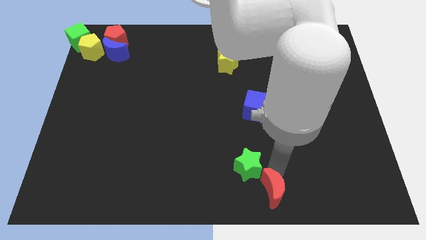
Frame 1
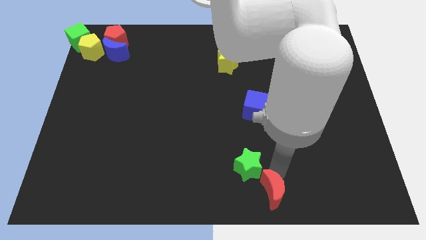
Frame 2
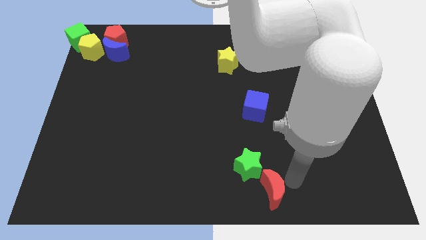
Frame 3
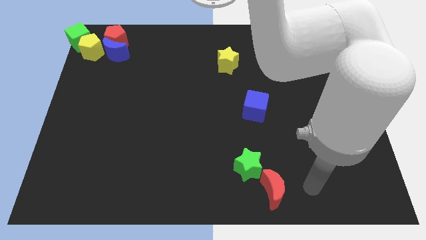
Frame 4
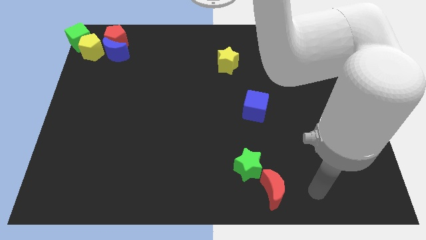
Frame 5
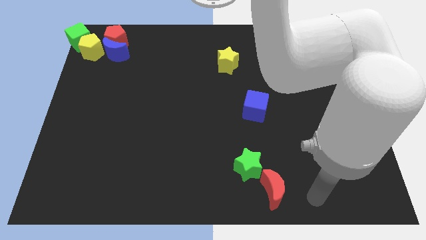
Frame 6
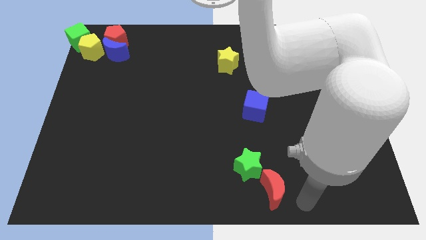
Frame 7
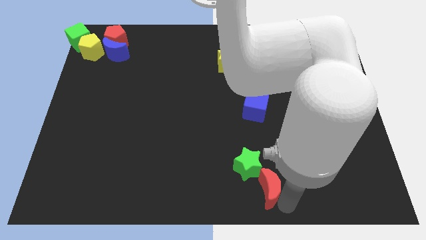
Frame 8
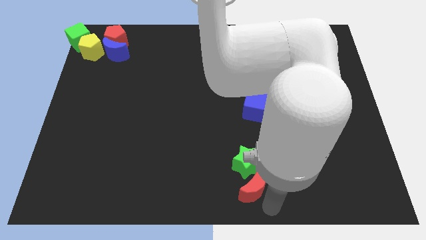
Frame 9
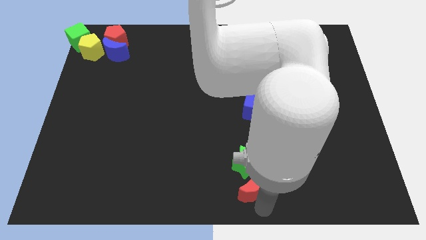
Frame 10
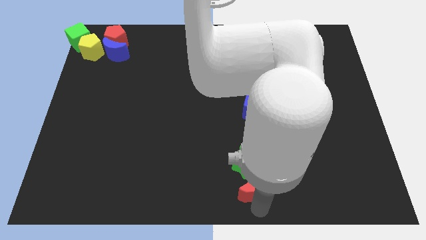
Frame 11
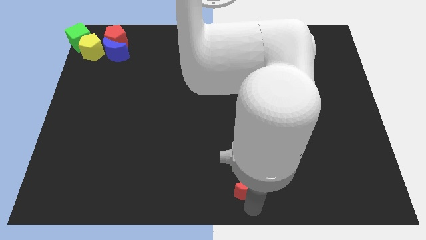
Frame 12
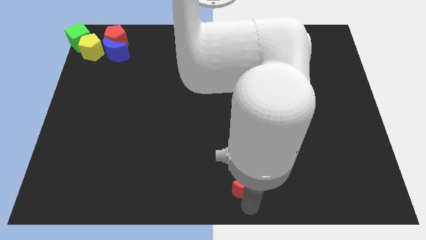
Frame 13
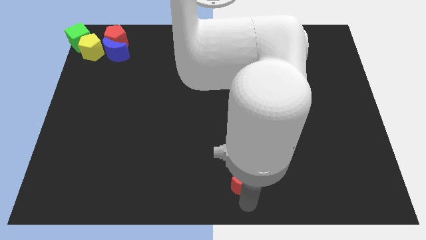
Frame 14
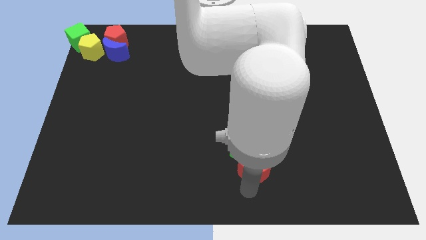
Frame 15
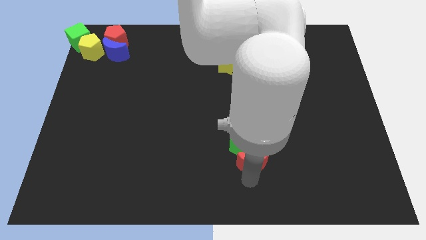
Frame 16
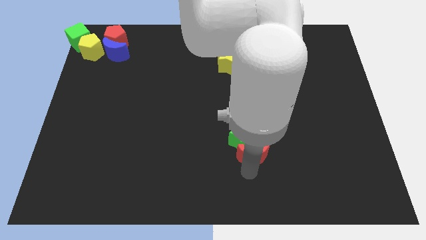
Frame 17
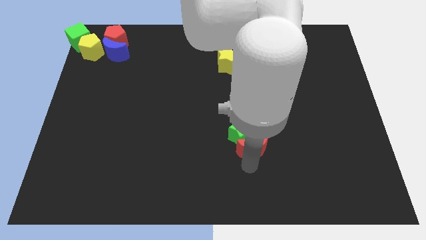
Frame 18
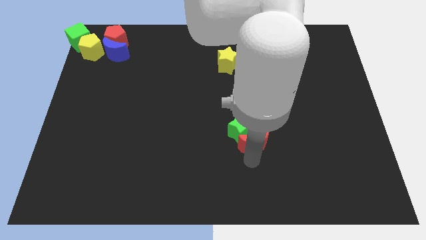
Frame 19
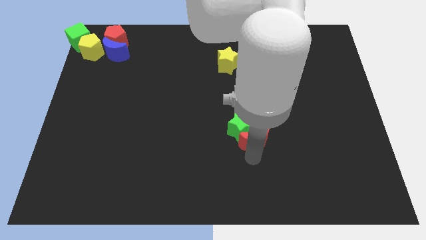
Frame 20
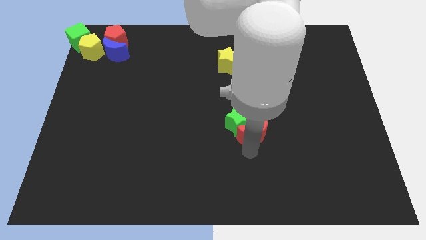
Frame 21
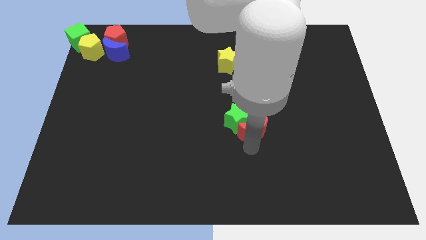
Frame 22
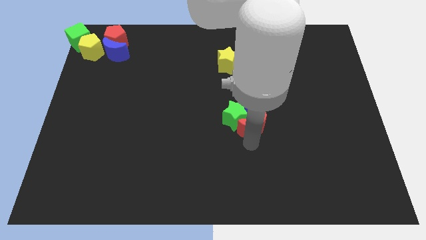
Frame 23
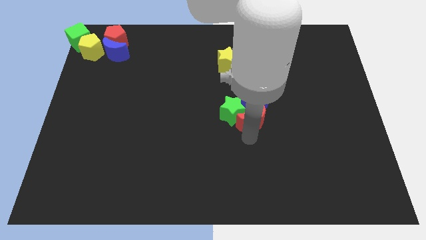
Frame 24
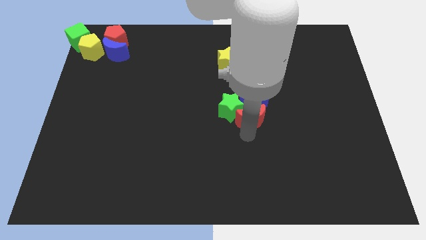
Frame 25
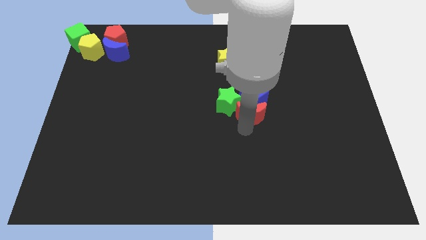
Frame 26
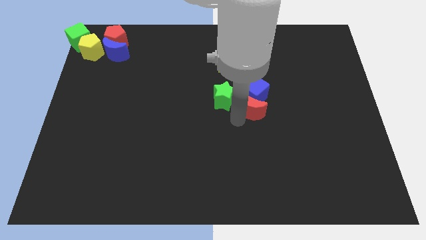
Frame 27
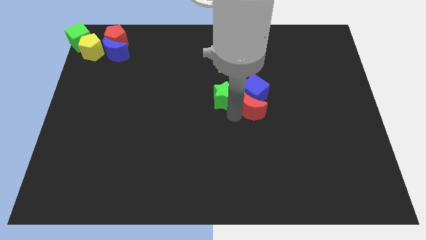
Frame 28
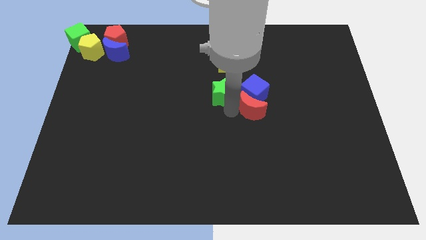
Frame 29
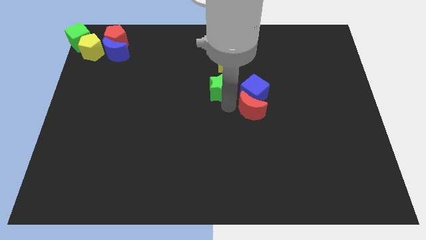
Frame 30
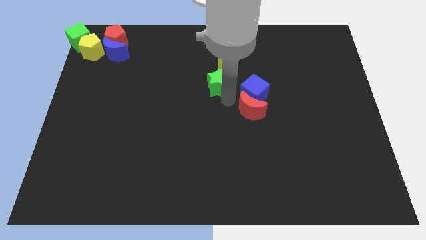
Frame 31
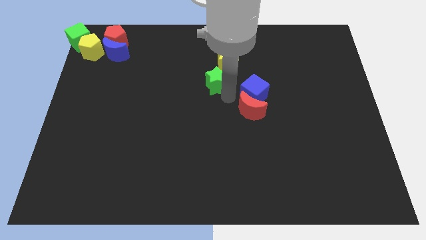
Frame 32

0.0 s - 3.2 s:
separate the green star and red crescent

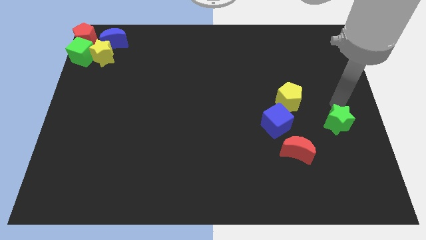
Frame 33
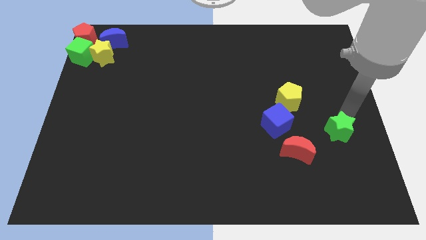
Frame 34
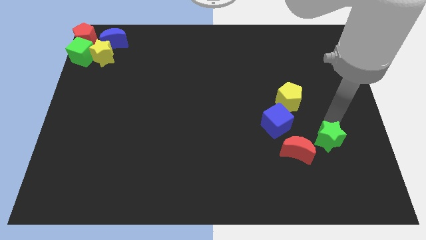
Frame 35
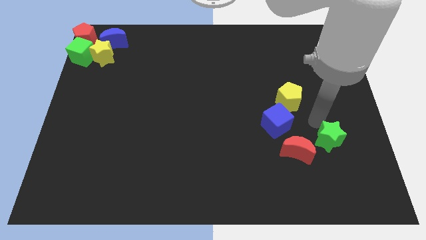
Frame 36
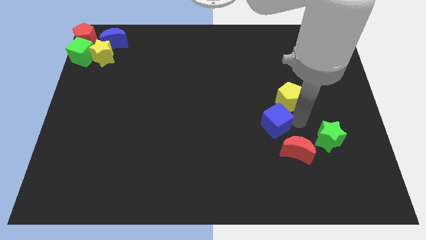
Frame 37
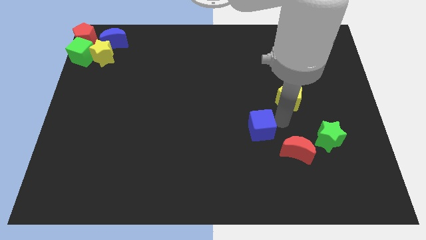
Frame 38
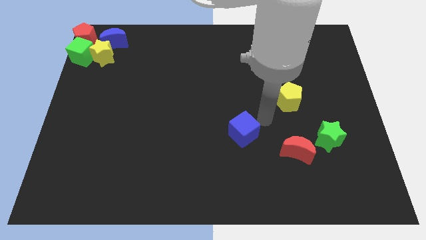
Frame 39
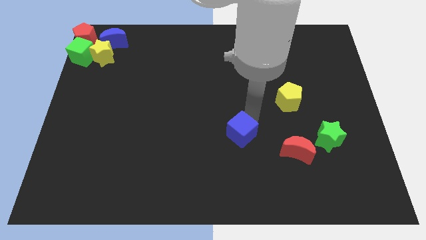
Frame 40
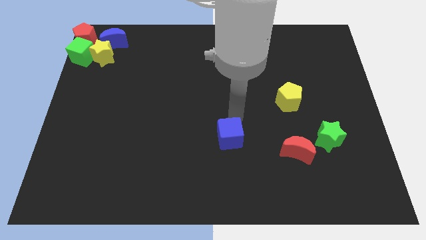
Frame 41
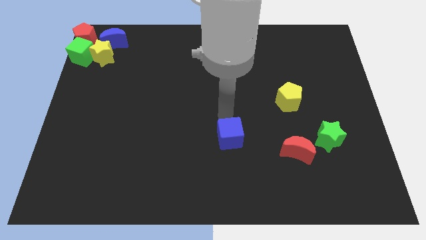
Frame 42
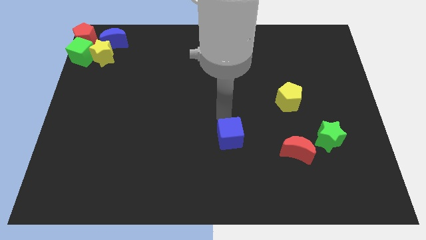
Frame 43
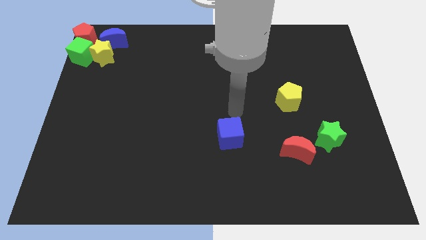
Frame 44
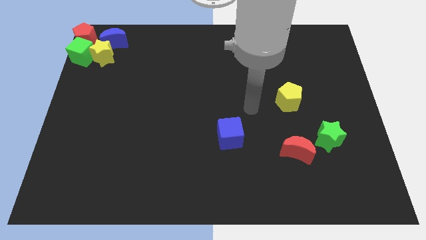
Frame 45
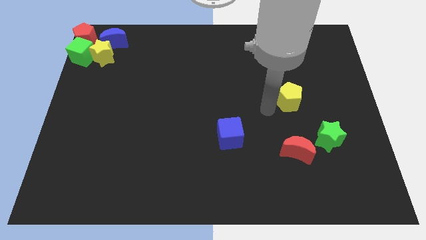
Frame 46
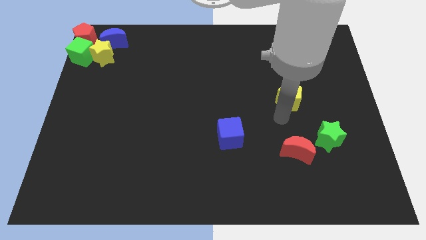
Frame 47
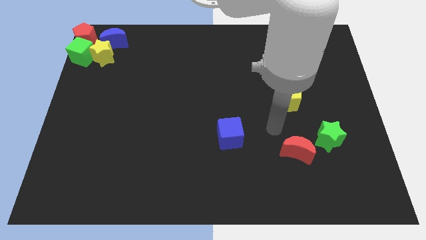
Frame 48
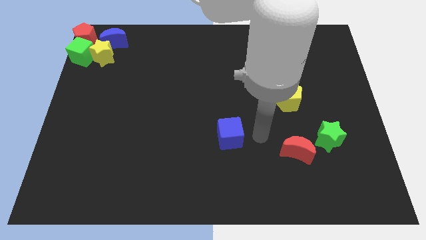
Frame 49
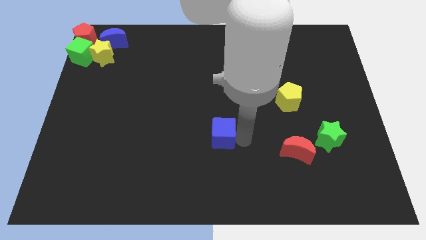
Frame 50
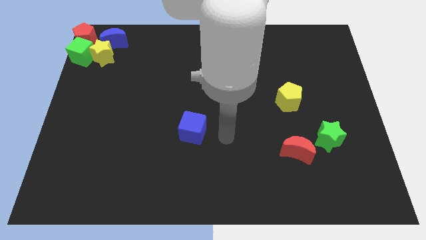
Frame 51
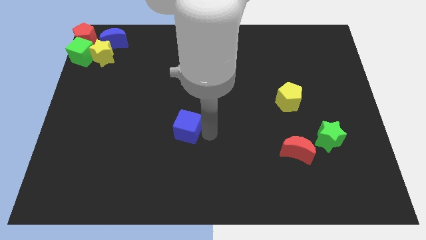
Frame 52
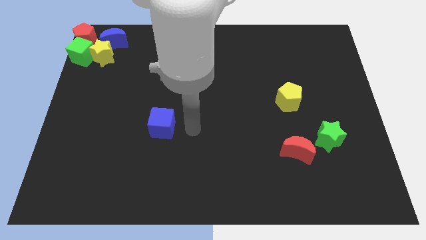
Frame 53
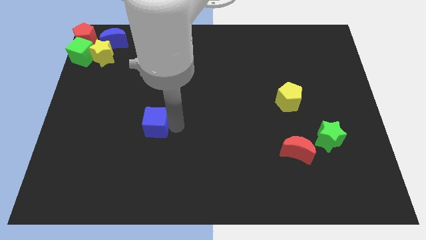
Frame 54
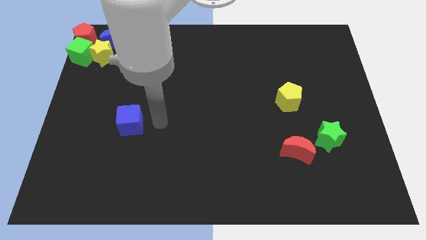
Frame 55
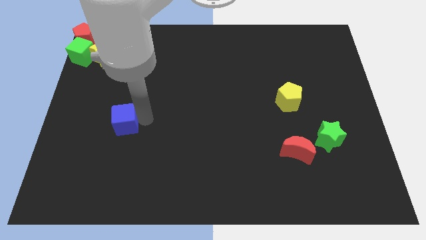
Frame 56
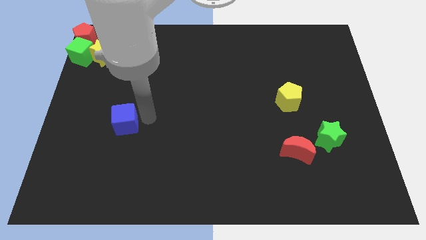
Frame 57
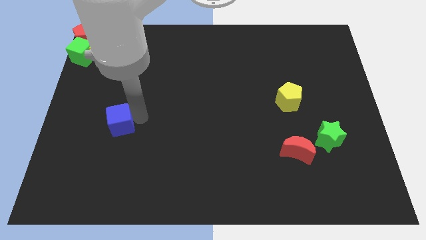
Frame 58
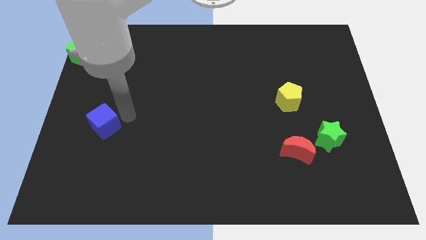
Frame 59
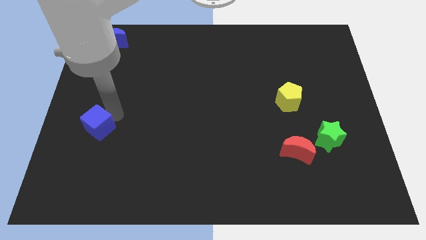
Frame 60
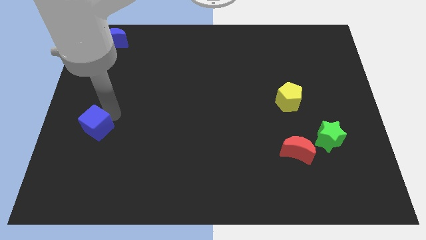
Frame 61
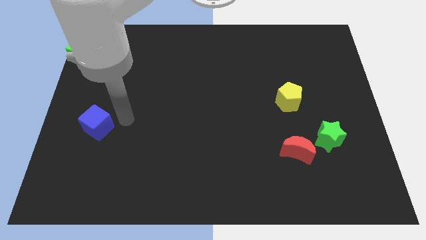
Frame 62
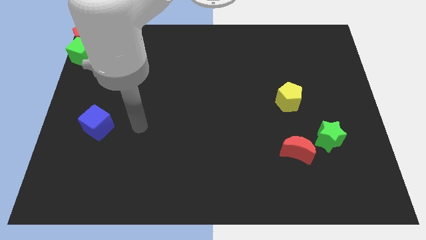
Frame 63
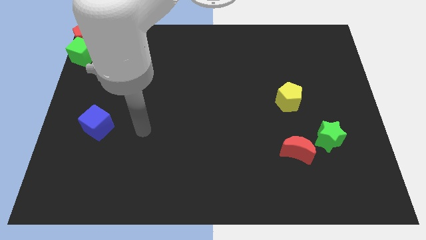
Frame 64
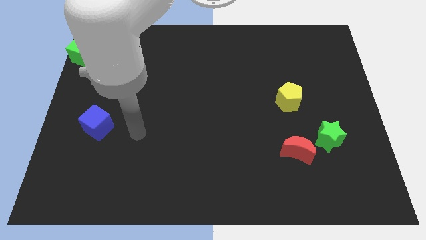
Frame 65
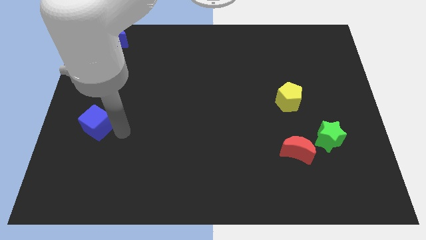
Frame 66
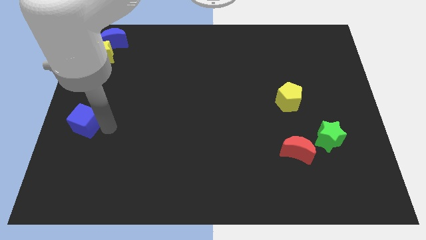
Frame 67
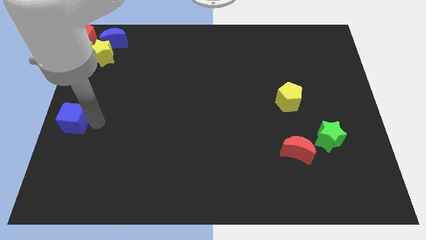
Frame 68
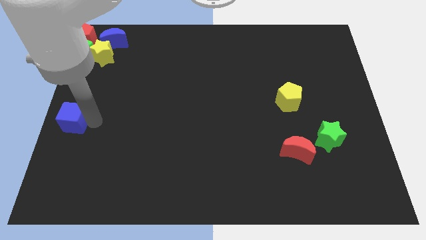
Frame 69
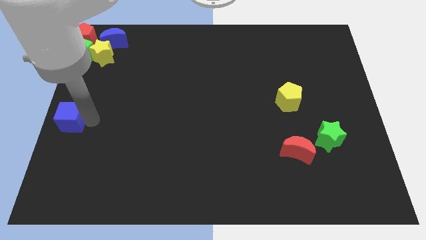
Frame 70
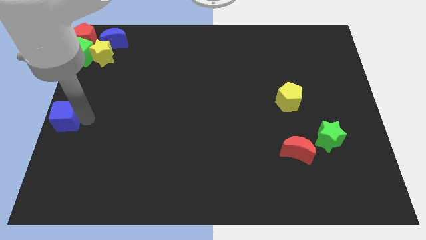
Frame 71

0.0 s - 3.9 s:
move blue cube to the left side of the board

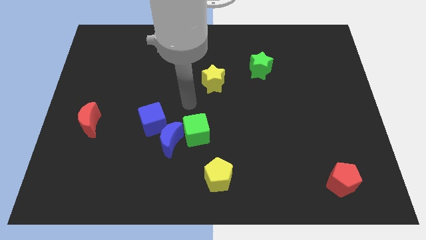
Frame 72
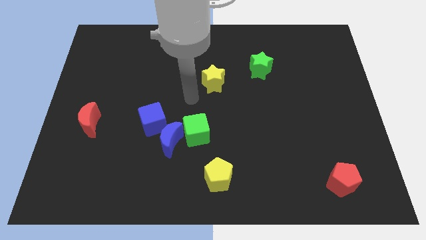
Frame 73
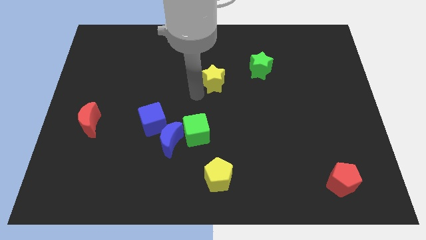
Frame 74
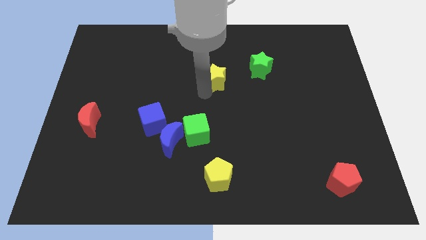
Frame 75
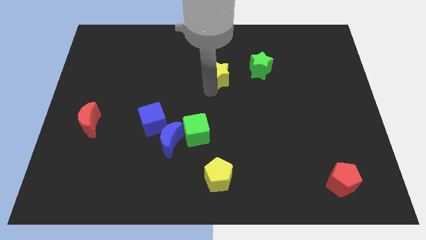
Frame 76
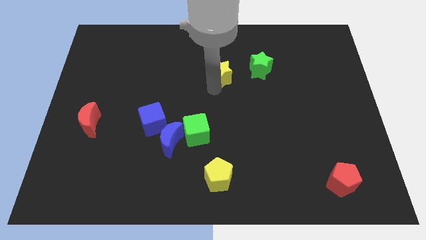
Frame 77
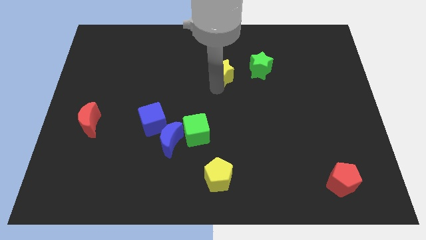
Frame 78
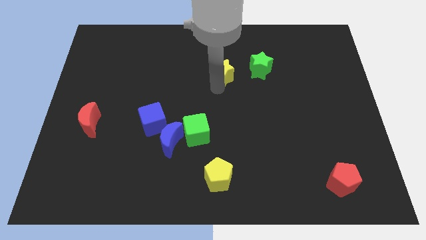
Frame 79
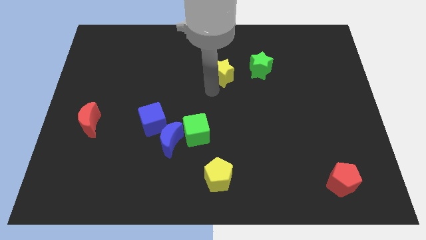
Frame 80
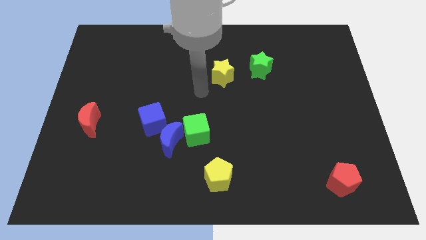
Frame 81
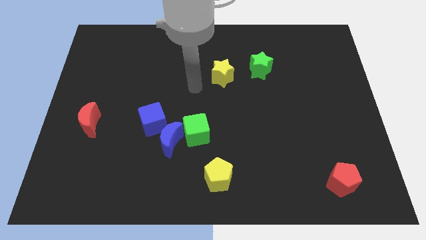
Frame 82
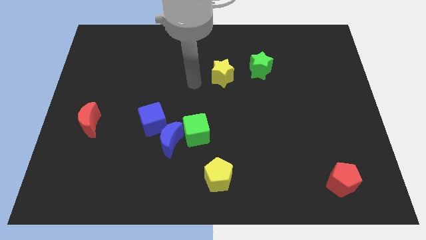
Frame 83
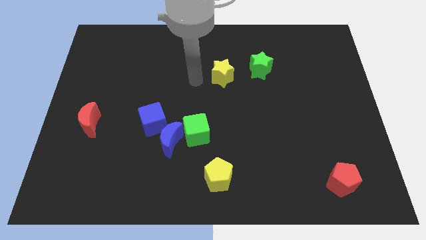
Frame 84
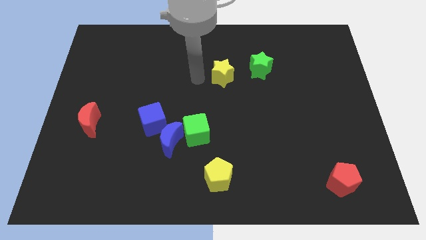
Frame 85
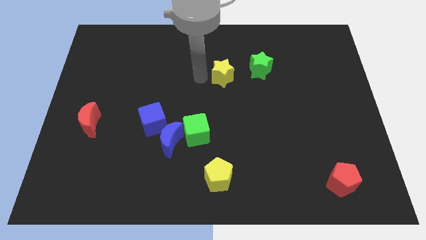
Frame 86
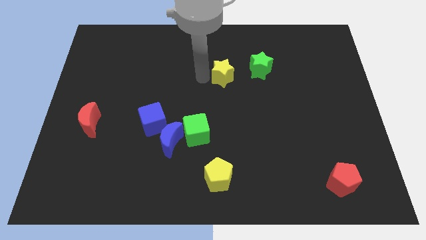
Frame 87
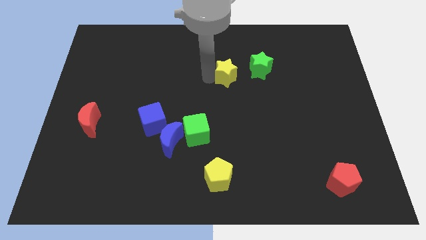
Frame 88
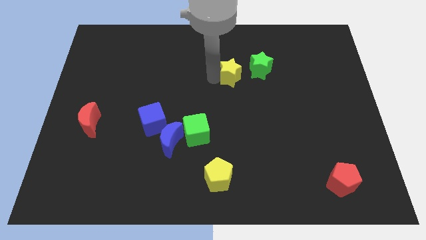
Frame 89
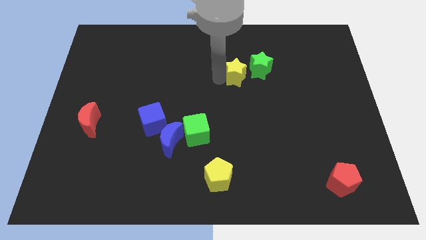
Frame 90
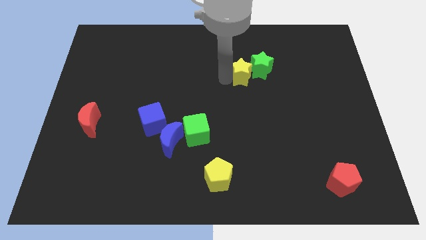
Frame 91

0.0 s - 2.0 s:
move the yellow star to the left side of the green star
